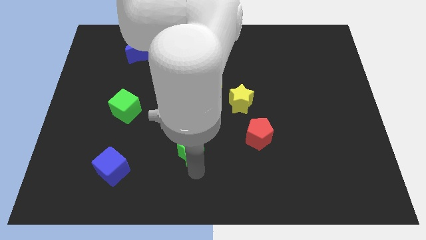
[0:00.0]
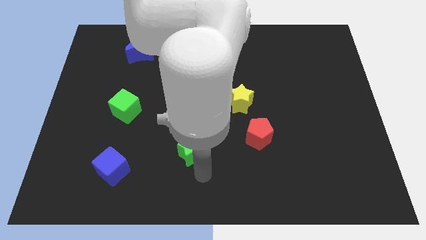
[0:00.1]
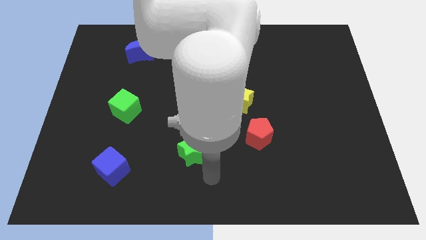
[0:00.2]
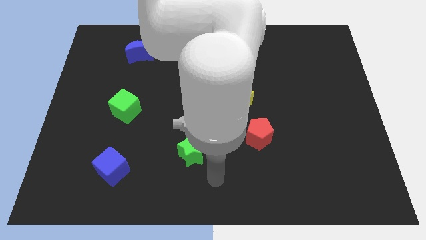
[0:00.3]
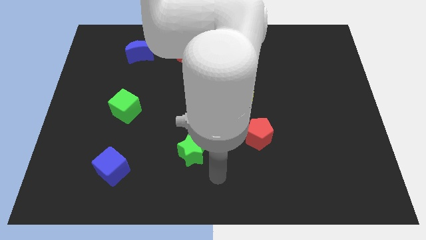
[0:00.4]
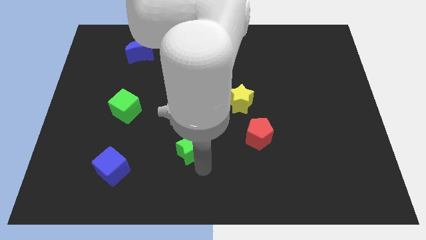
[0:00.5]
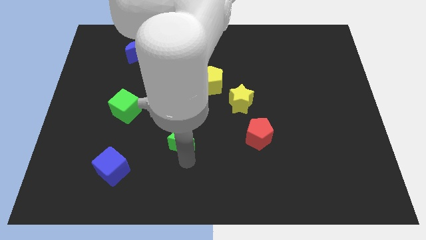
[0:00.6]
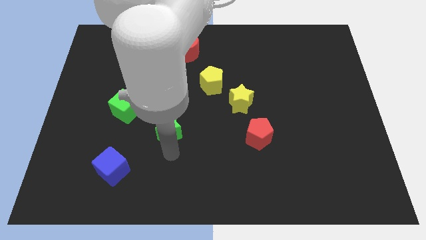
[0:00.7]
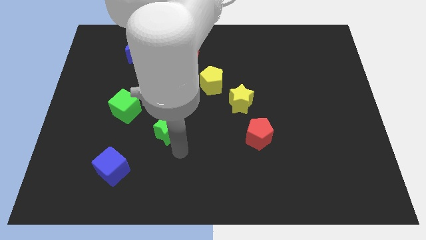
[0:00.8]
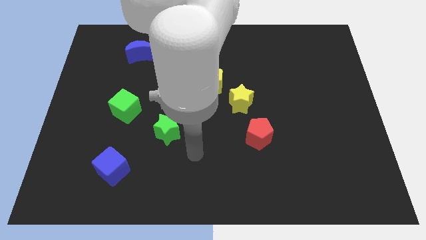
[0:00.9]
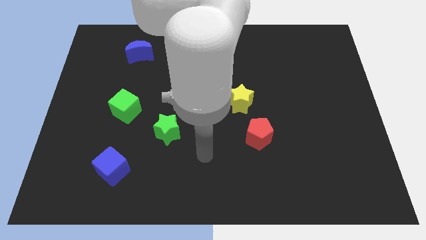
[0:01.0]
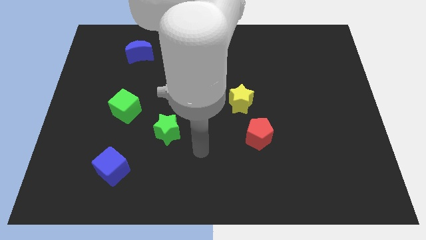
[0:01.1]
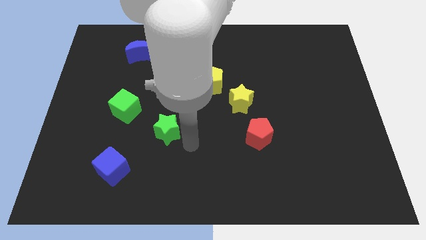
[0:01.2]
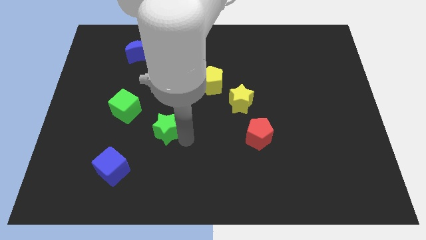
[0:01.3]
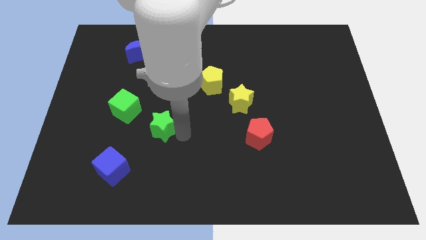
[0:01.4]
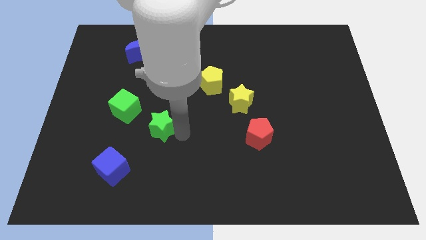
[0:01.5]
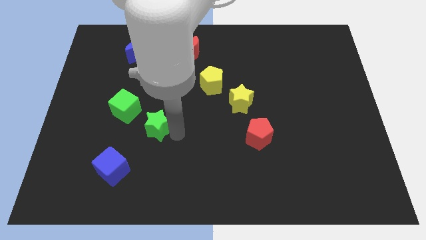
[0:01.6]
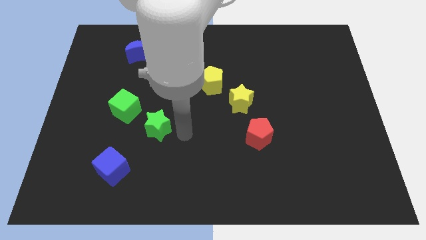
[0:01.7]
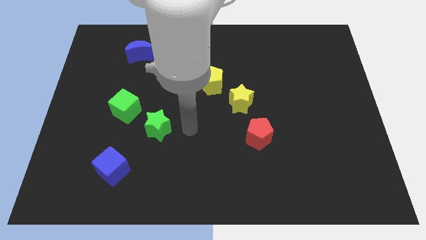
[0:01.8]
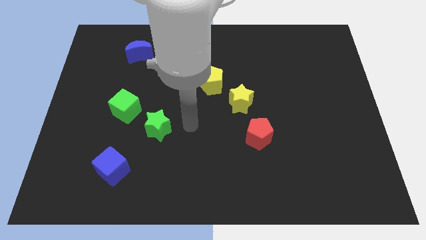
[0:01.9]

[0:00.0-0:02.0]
move the green star towards the right side of the green cube

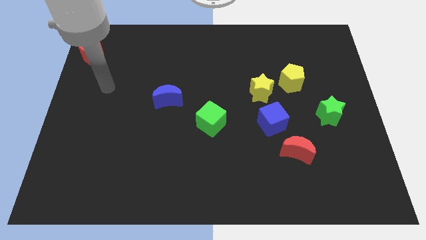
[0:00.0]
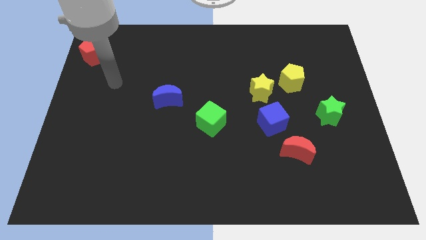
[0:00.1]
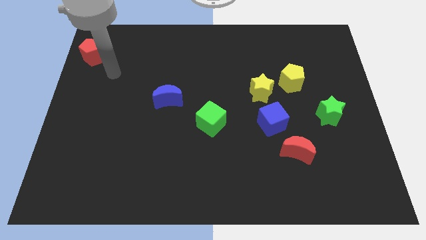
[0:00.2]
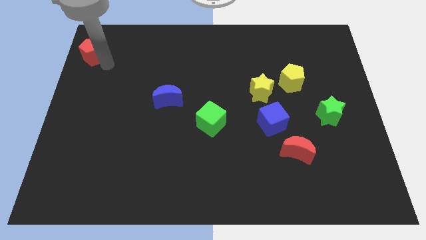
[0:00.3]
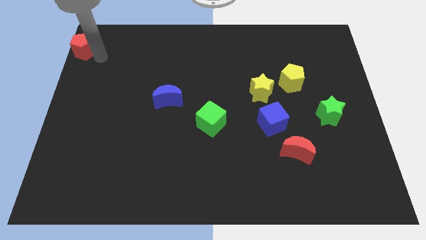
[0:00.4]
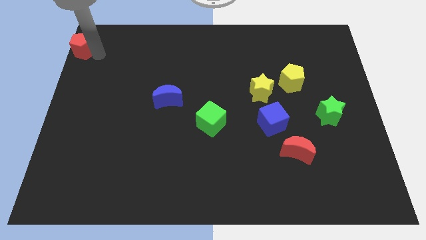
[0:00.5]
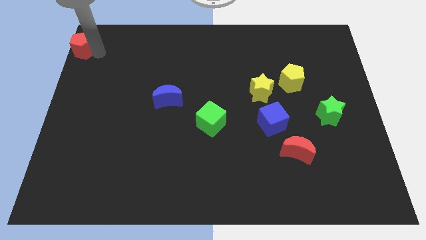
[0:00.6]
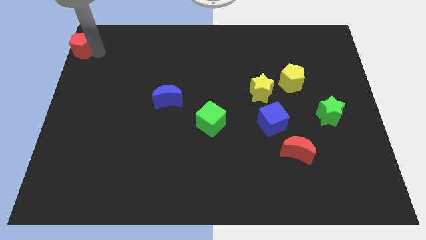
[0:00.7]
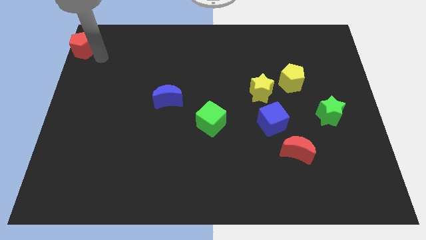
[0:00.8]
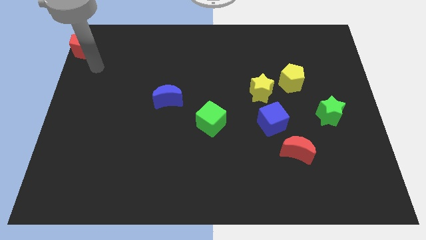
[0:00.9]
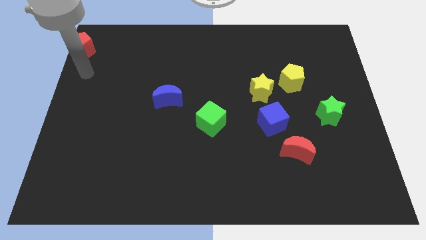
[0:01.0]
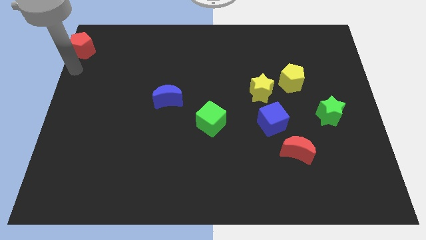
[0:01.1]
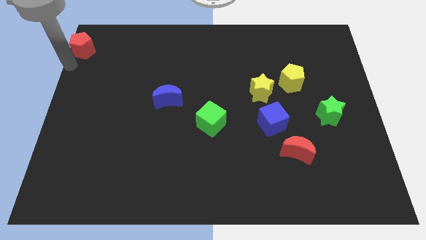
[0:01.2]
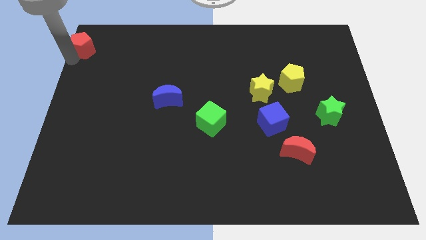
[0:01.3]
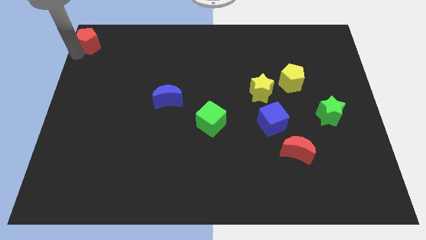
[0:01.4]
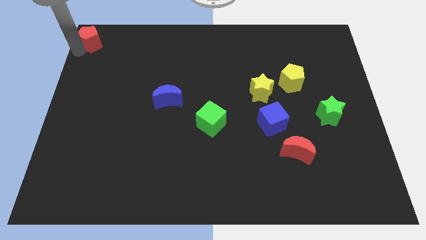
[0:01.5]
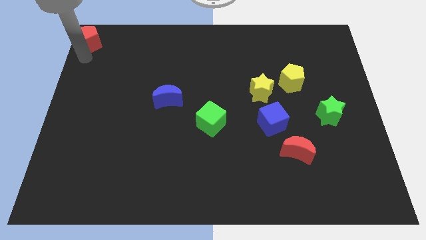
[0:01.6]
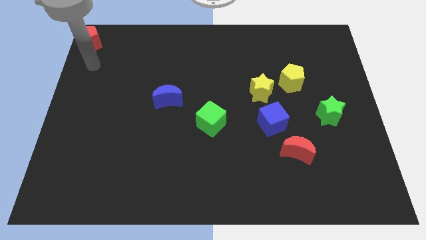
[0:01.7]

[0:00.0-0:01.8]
place the red pentagon at the top left corner

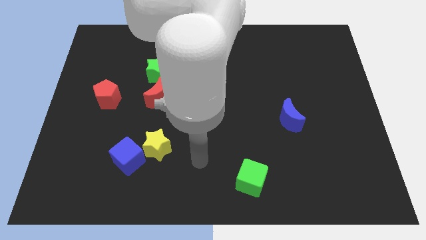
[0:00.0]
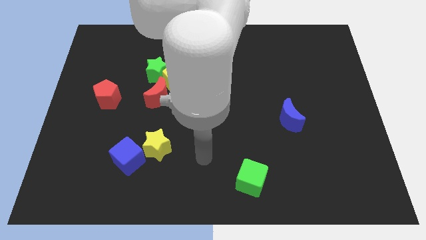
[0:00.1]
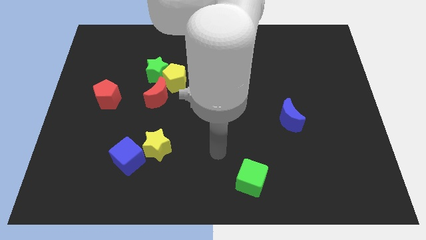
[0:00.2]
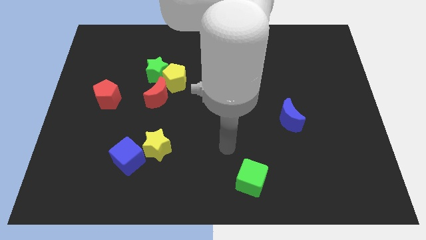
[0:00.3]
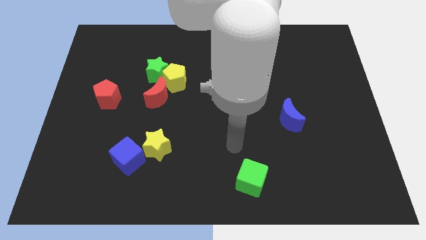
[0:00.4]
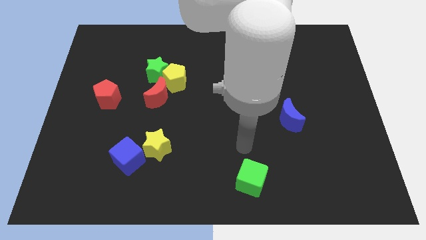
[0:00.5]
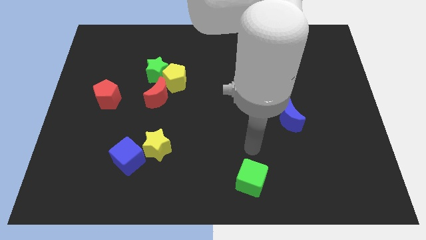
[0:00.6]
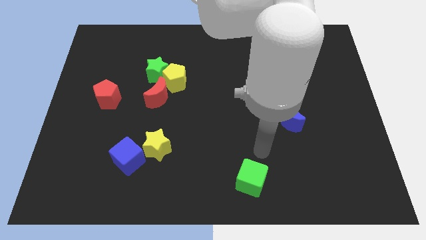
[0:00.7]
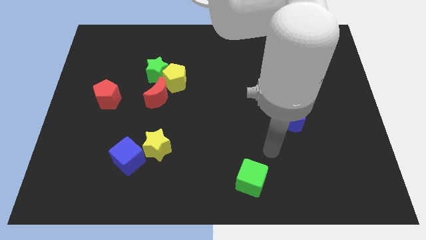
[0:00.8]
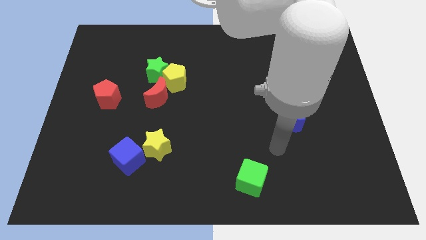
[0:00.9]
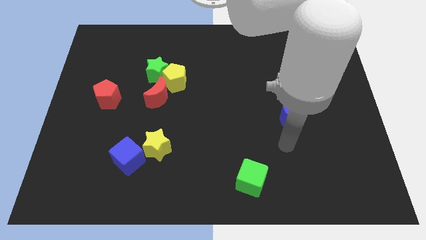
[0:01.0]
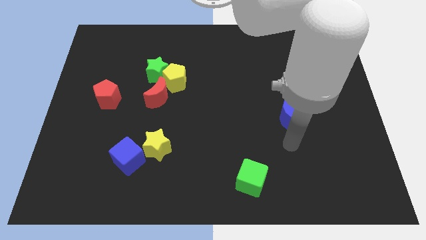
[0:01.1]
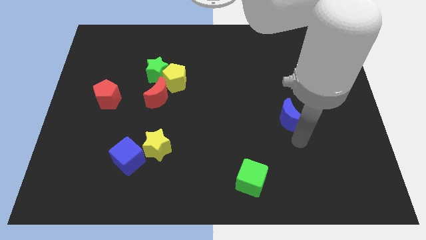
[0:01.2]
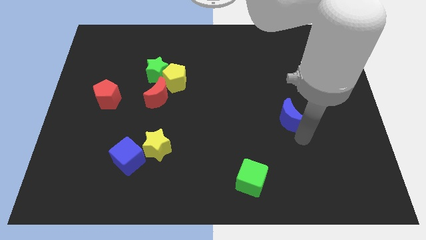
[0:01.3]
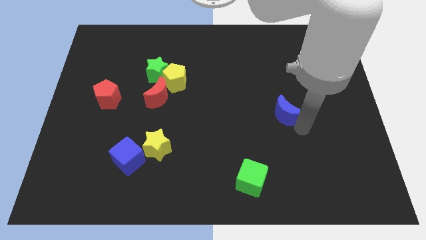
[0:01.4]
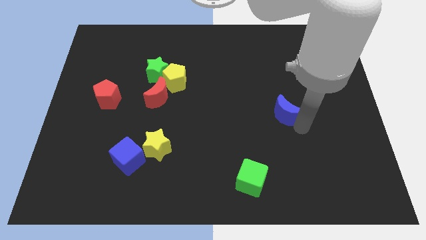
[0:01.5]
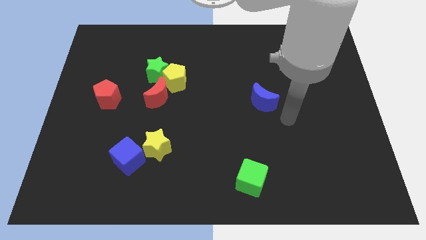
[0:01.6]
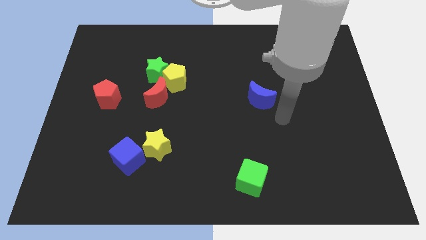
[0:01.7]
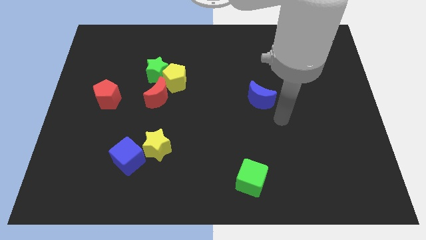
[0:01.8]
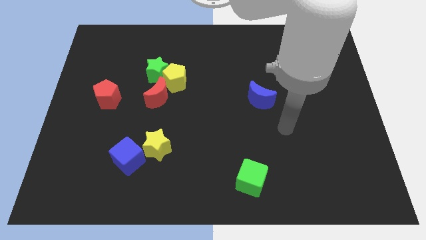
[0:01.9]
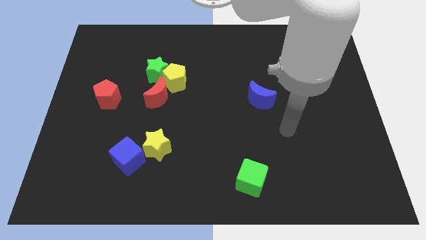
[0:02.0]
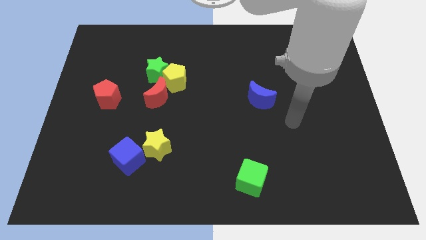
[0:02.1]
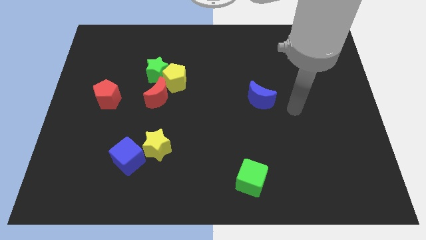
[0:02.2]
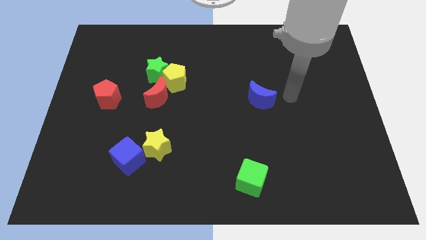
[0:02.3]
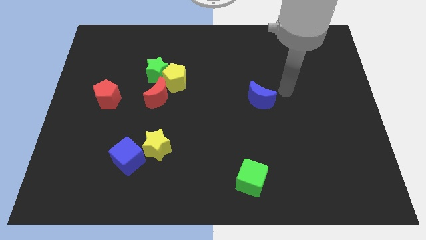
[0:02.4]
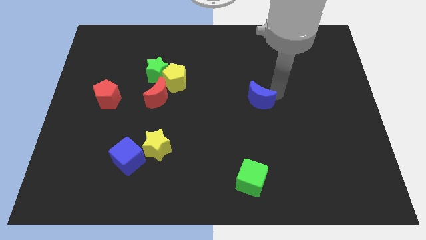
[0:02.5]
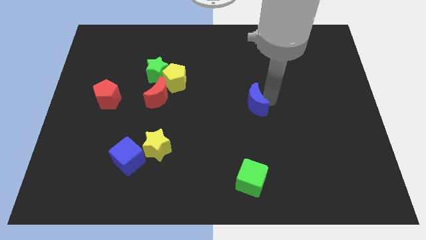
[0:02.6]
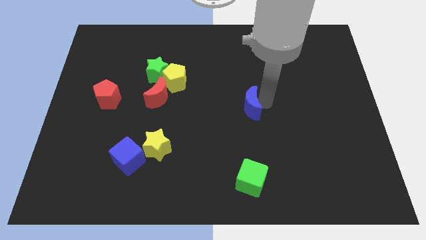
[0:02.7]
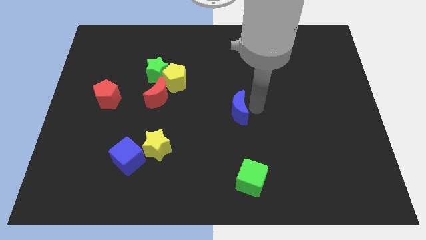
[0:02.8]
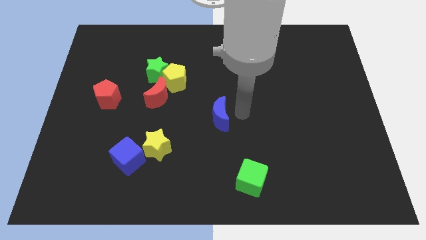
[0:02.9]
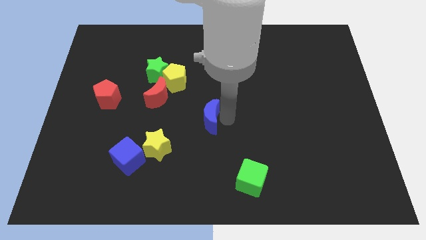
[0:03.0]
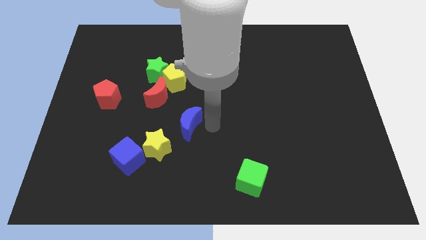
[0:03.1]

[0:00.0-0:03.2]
push the blue crescent towards the yellow star

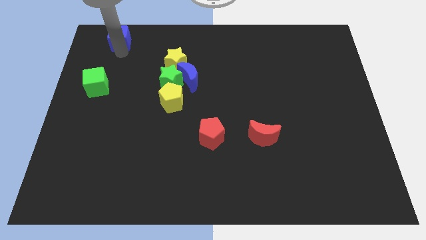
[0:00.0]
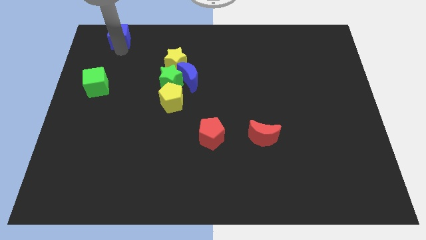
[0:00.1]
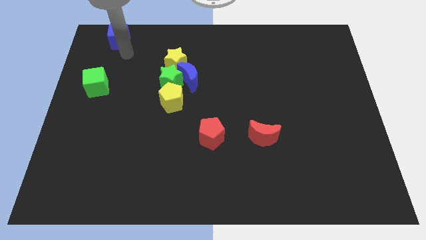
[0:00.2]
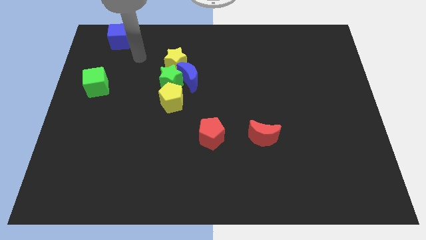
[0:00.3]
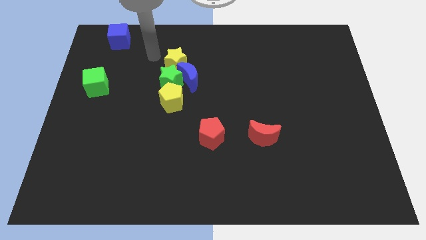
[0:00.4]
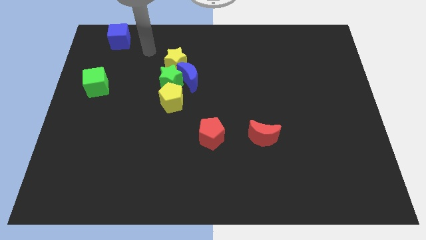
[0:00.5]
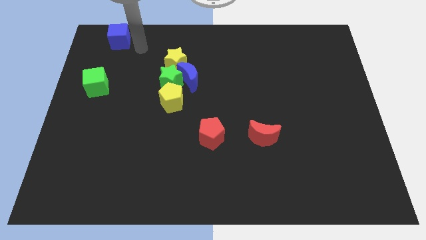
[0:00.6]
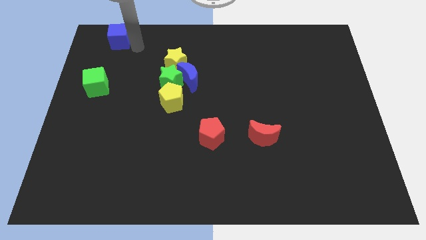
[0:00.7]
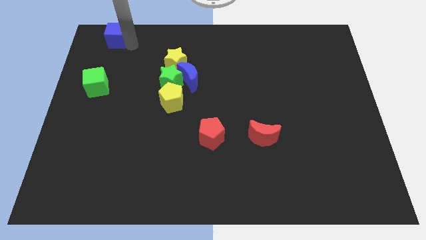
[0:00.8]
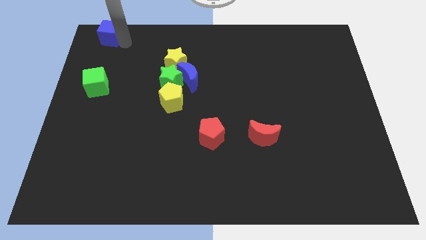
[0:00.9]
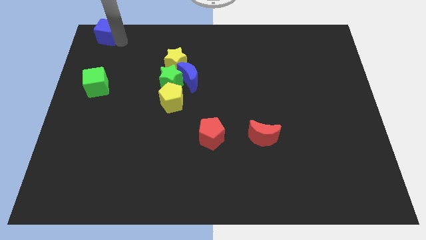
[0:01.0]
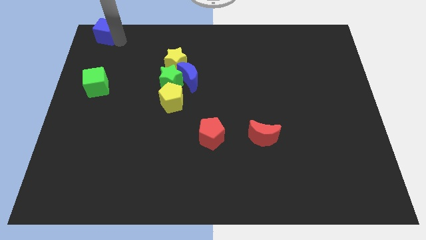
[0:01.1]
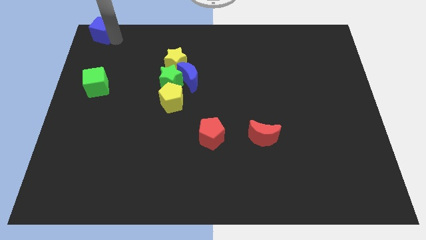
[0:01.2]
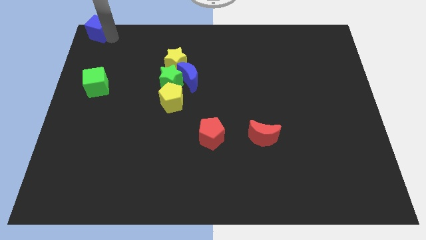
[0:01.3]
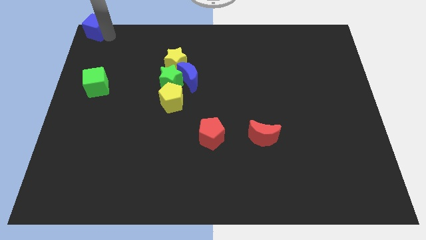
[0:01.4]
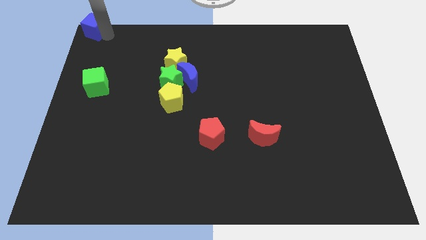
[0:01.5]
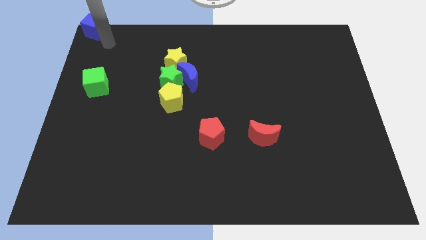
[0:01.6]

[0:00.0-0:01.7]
push the blue cube to the top left corner of the board

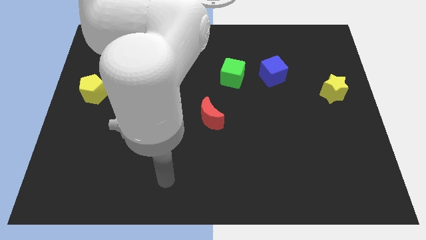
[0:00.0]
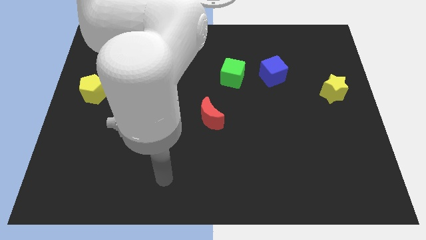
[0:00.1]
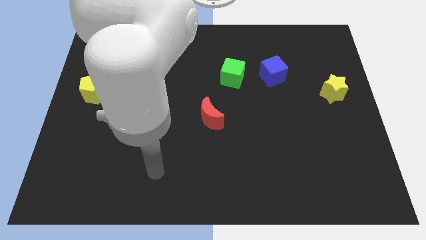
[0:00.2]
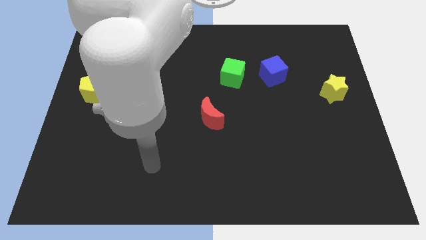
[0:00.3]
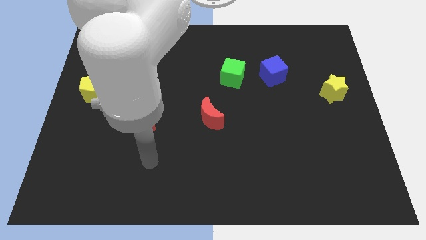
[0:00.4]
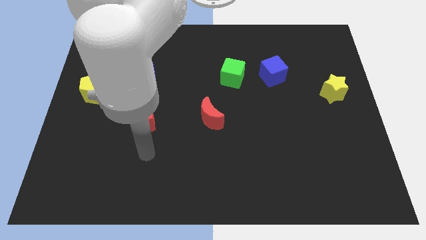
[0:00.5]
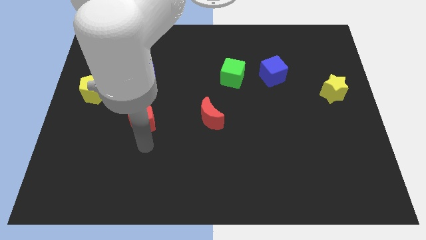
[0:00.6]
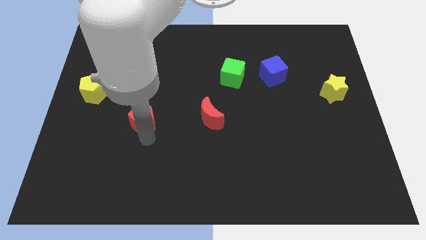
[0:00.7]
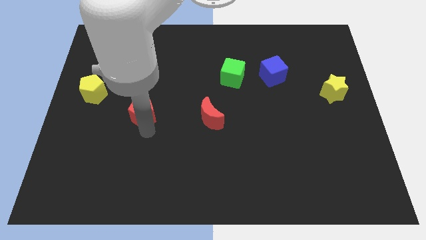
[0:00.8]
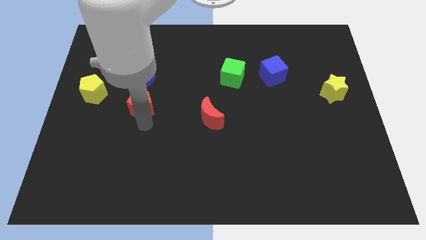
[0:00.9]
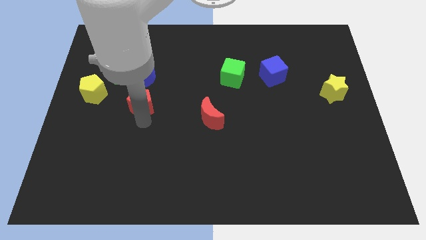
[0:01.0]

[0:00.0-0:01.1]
move the red pentagon slightly to the top
